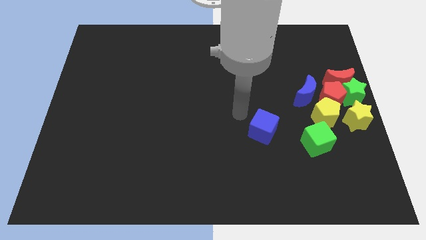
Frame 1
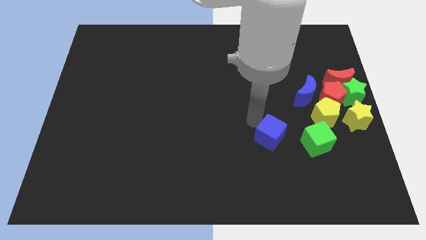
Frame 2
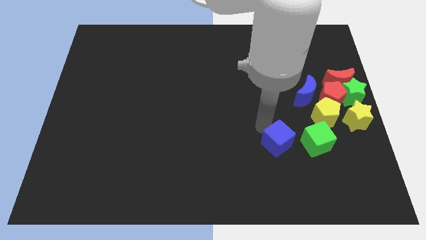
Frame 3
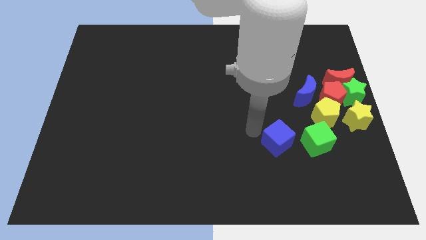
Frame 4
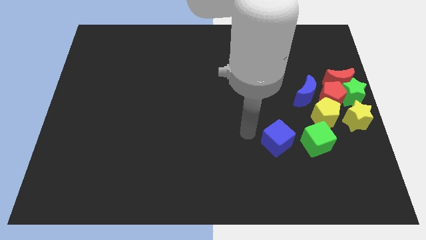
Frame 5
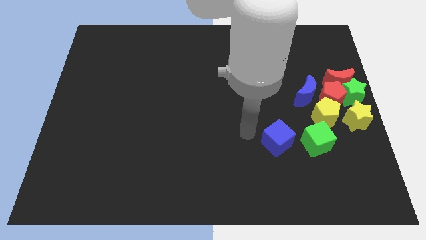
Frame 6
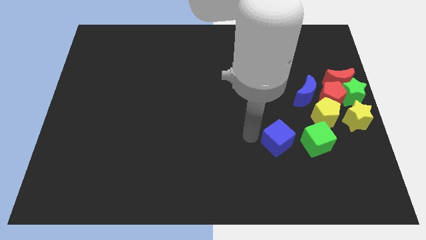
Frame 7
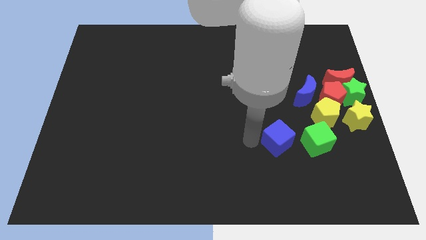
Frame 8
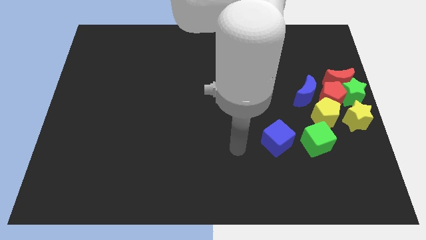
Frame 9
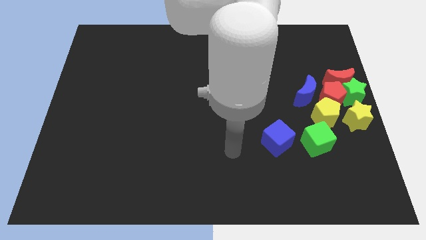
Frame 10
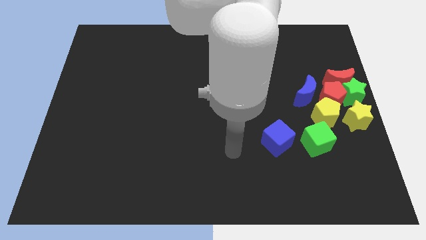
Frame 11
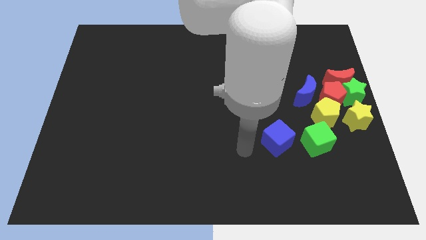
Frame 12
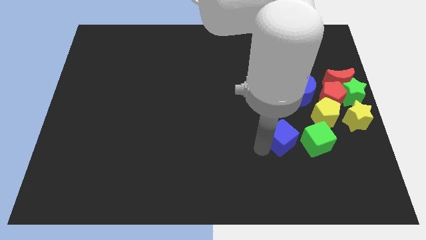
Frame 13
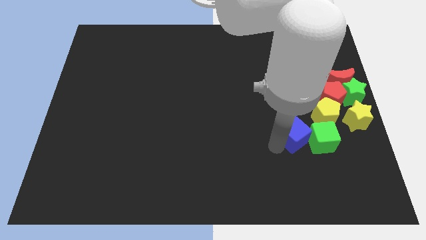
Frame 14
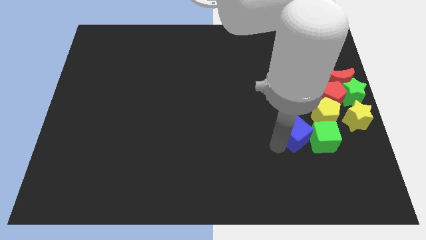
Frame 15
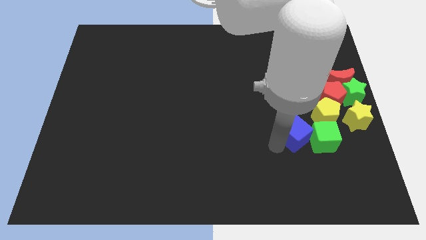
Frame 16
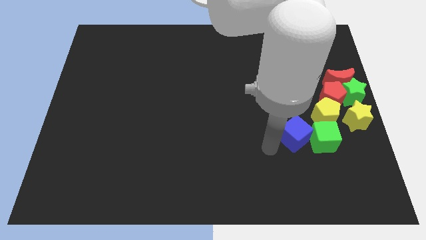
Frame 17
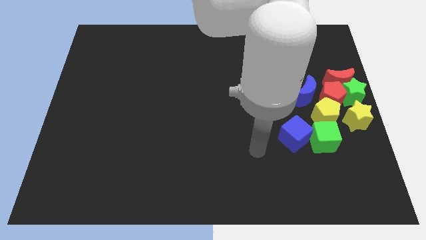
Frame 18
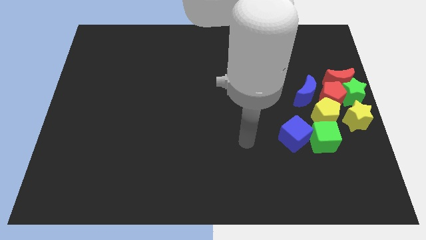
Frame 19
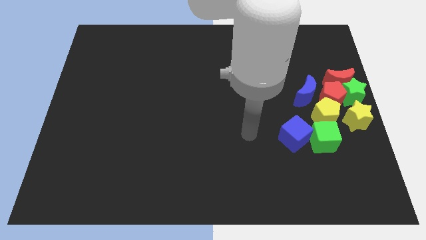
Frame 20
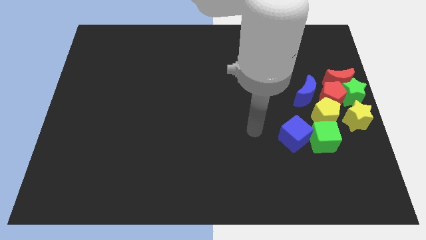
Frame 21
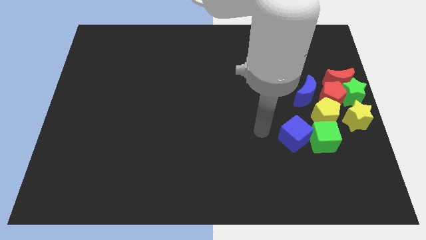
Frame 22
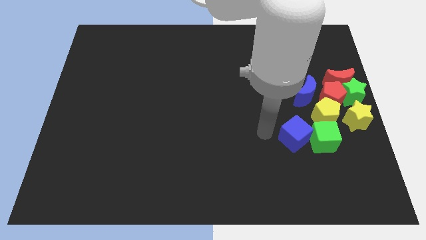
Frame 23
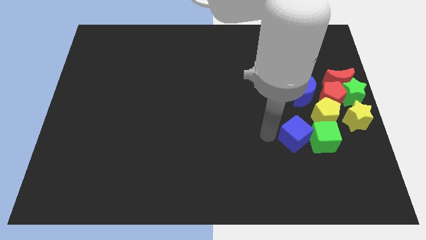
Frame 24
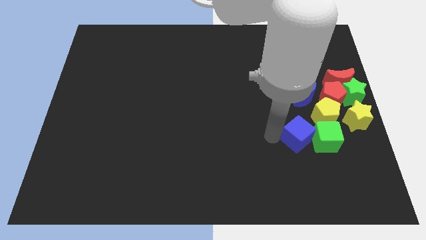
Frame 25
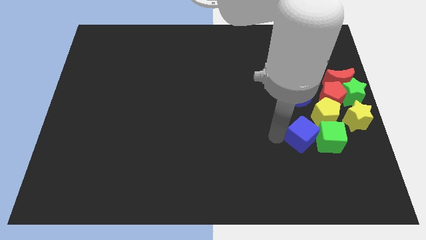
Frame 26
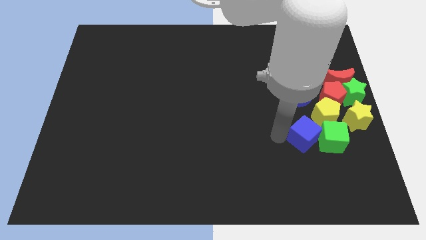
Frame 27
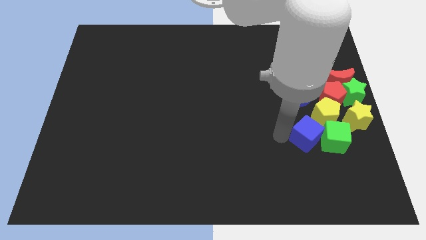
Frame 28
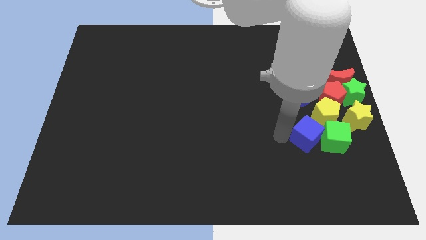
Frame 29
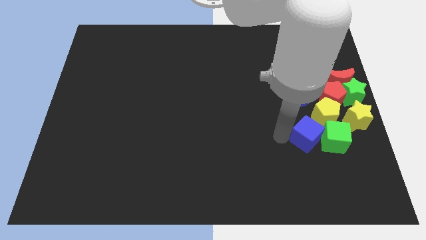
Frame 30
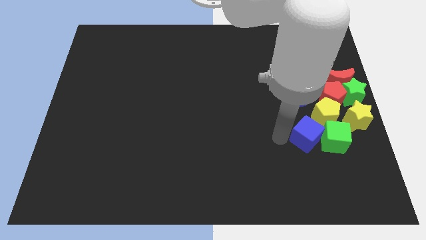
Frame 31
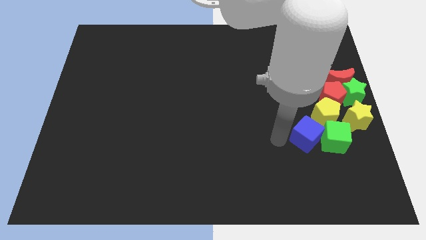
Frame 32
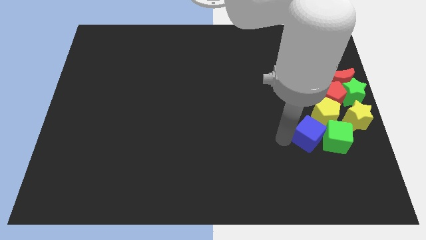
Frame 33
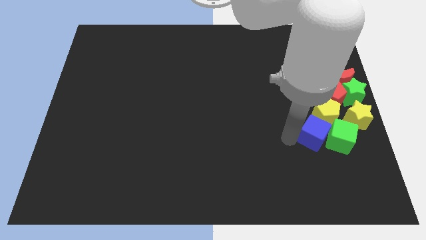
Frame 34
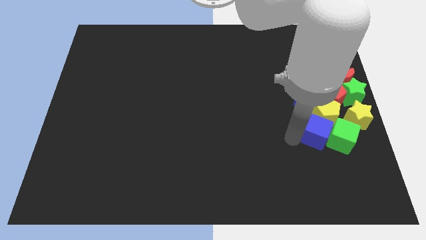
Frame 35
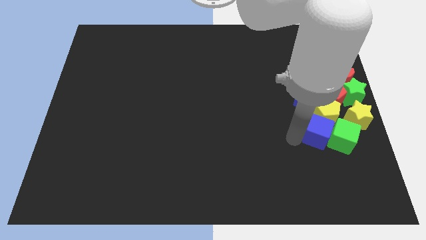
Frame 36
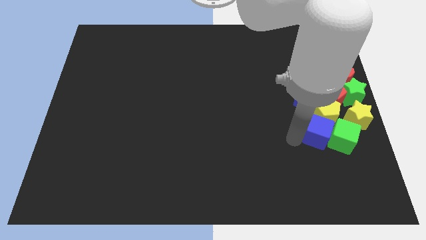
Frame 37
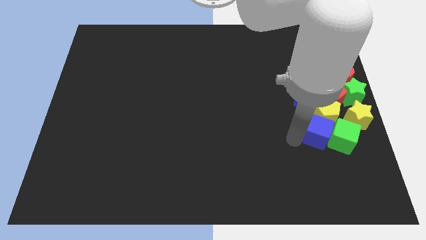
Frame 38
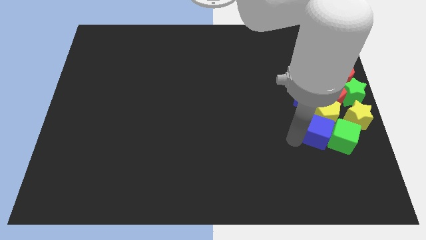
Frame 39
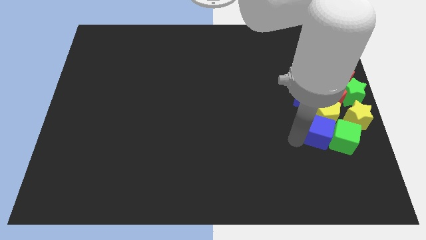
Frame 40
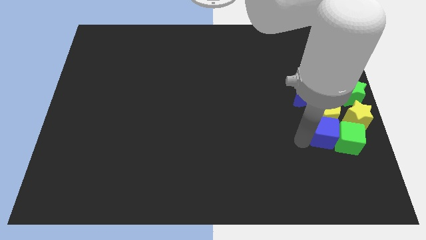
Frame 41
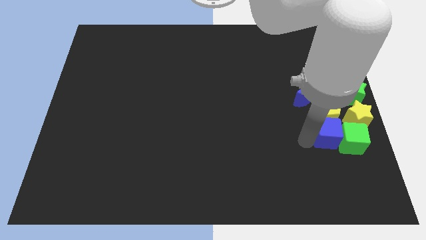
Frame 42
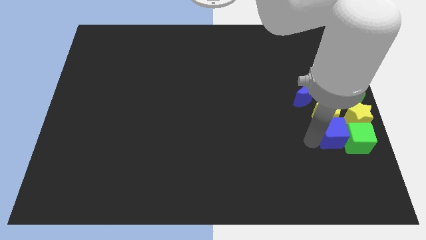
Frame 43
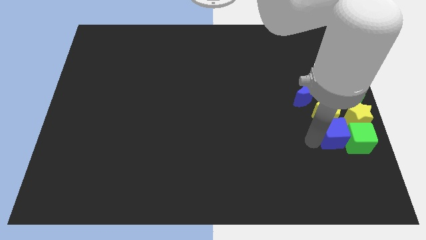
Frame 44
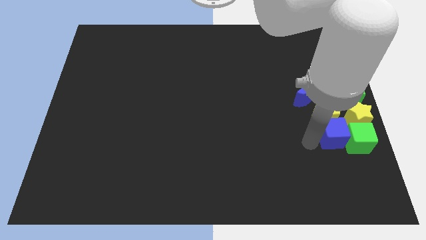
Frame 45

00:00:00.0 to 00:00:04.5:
push the blue cube into the green cube

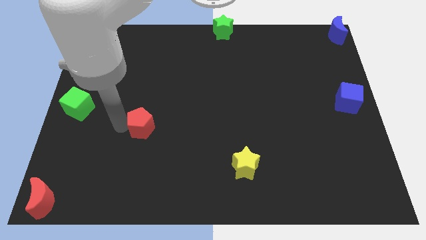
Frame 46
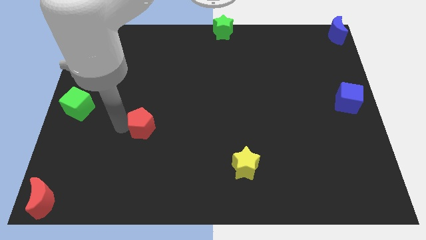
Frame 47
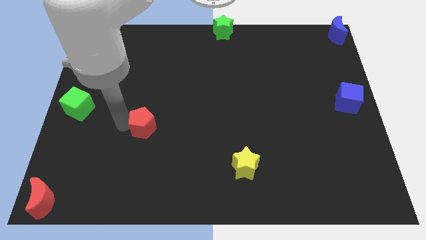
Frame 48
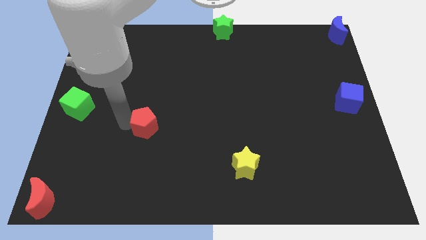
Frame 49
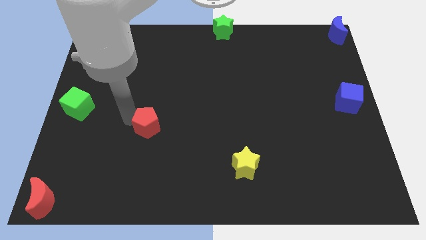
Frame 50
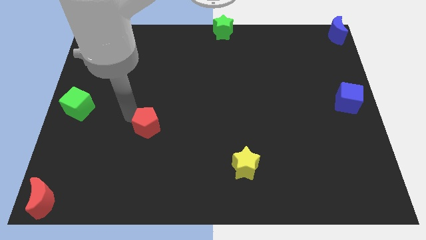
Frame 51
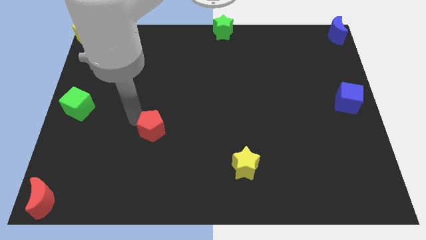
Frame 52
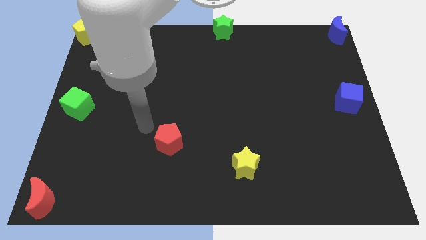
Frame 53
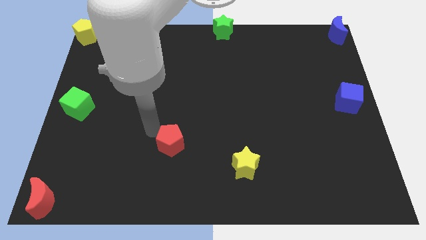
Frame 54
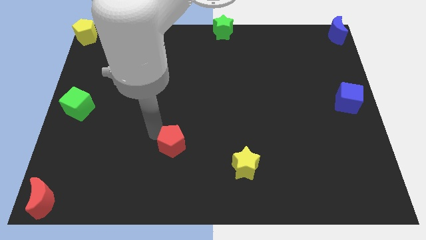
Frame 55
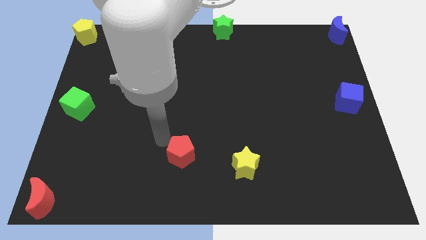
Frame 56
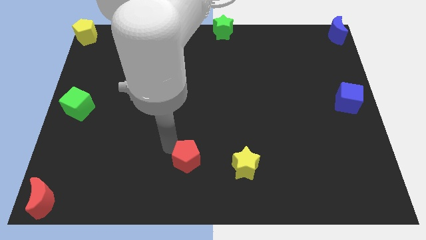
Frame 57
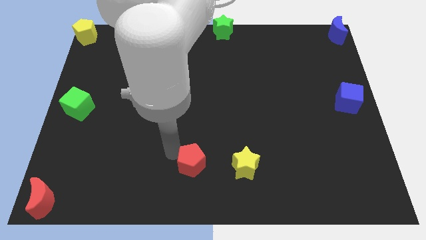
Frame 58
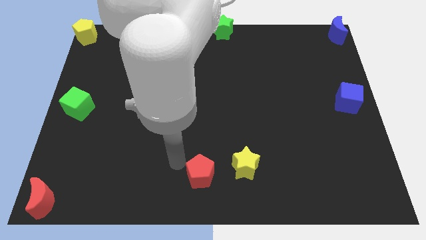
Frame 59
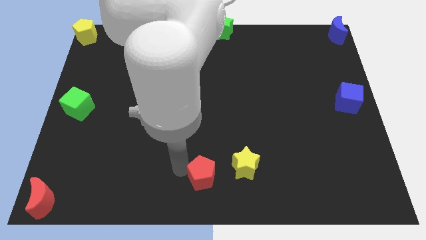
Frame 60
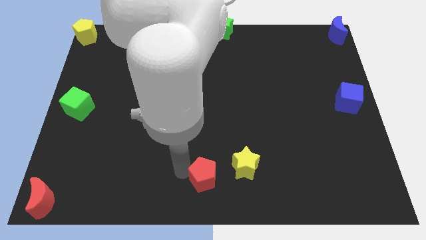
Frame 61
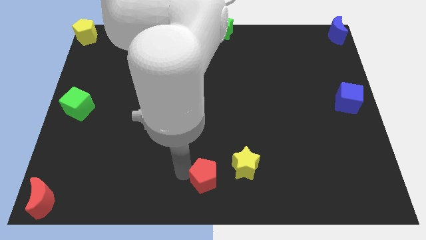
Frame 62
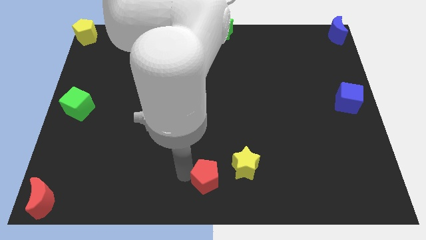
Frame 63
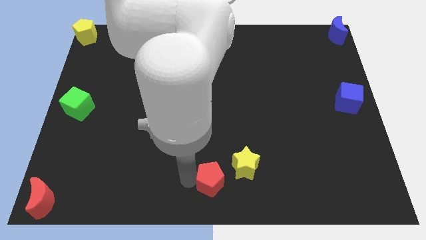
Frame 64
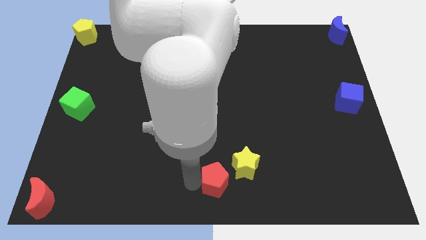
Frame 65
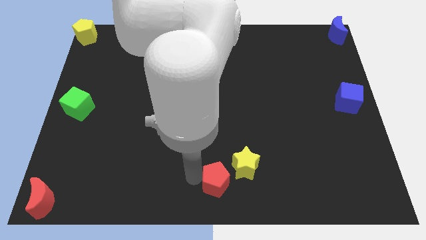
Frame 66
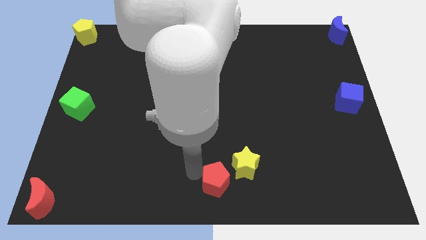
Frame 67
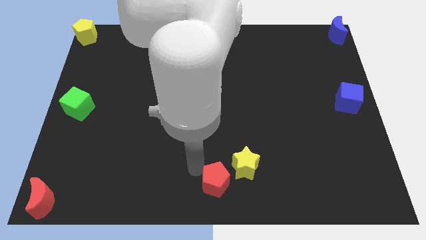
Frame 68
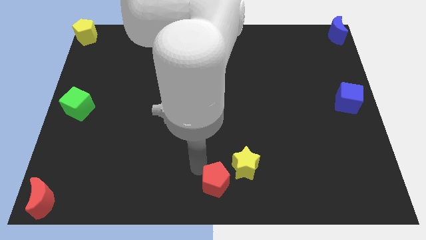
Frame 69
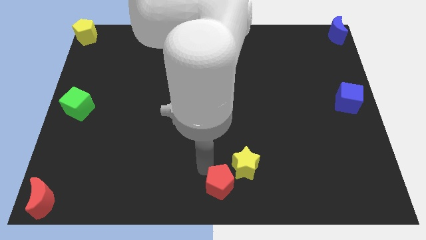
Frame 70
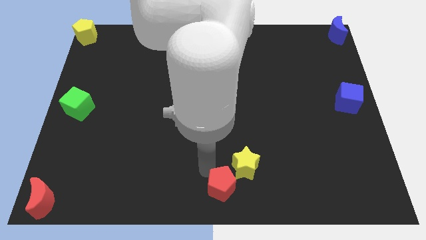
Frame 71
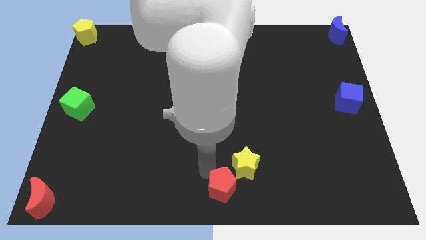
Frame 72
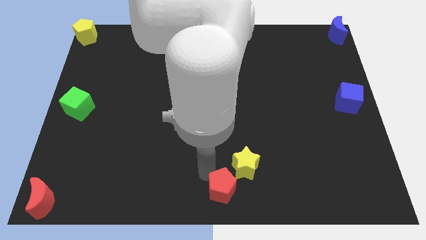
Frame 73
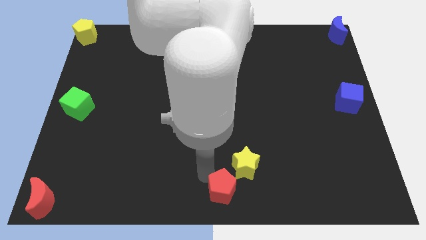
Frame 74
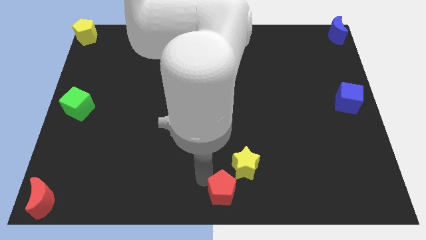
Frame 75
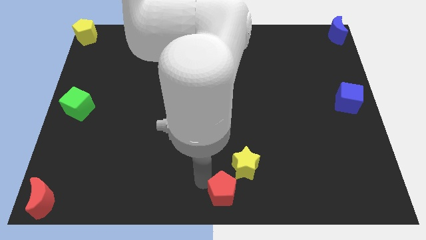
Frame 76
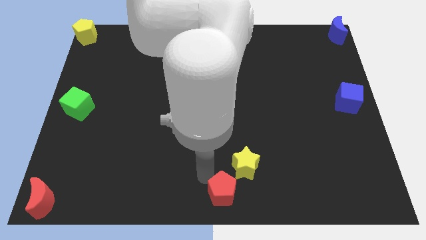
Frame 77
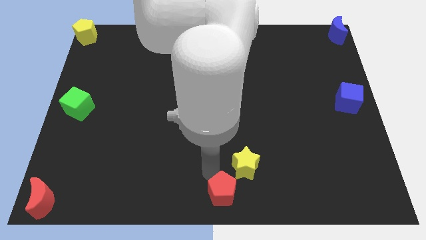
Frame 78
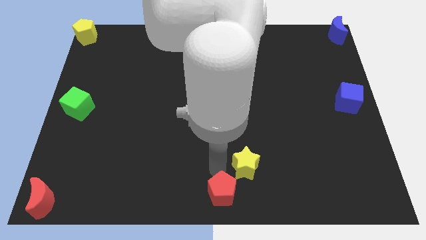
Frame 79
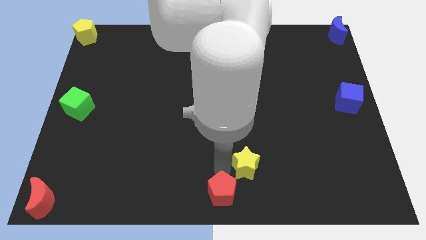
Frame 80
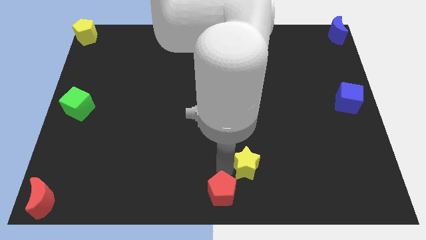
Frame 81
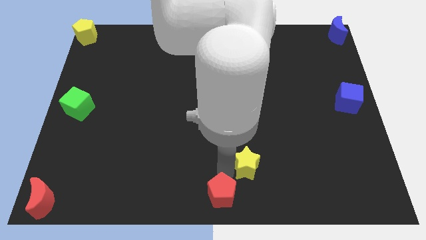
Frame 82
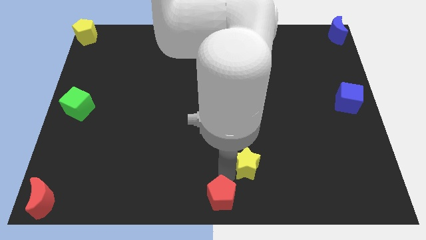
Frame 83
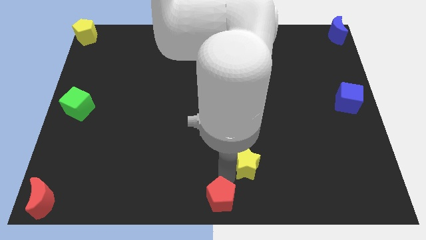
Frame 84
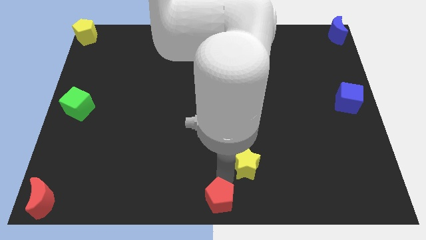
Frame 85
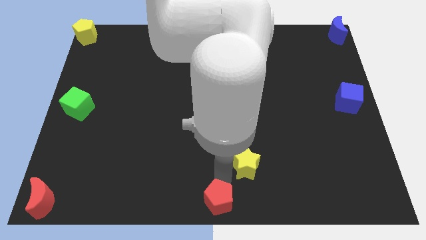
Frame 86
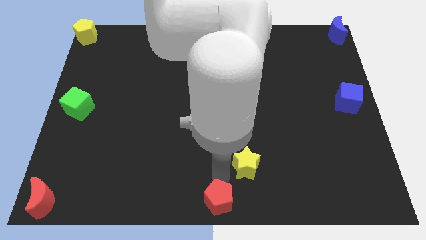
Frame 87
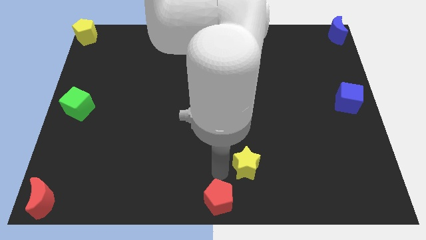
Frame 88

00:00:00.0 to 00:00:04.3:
place the red pentagon to the bottom center of the board
